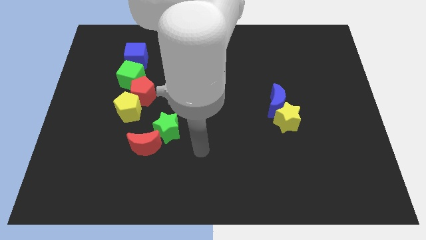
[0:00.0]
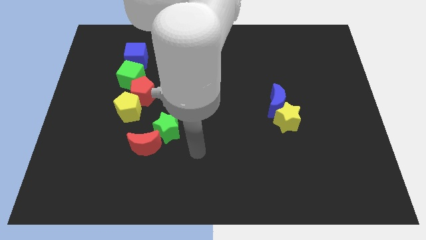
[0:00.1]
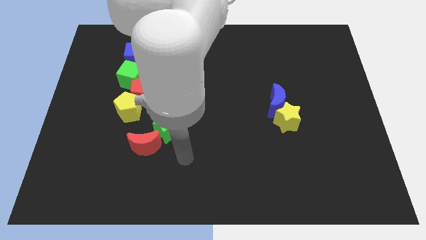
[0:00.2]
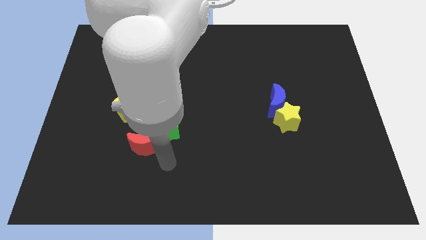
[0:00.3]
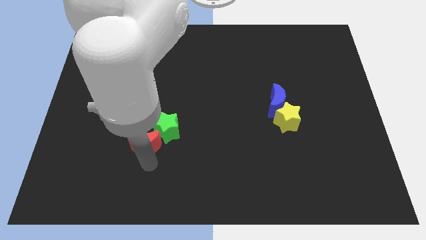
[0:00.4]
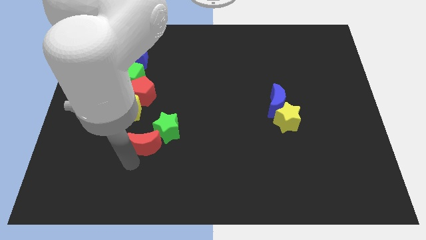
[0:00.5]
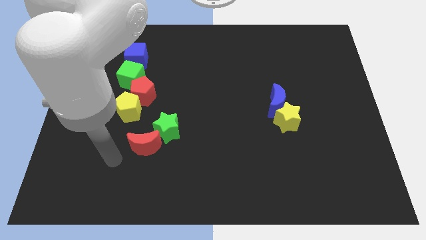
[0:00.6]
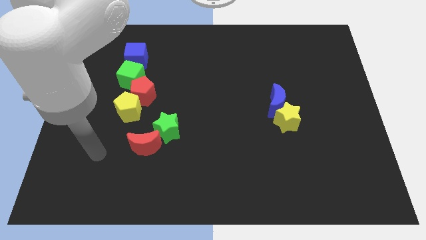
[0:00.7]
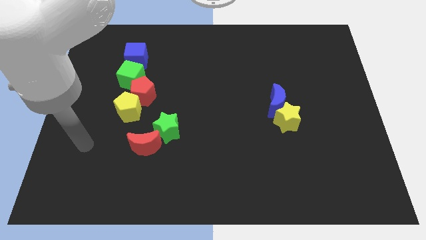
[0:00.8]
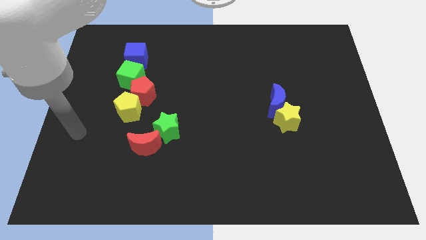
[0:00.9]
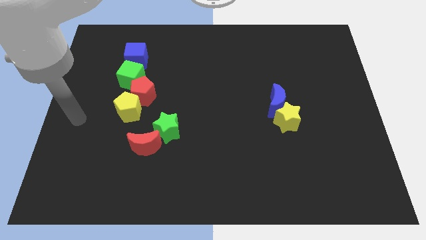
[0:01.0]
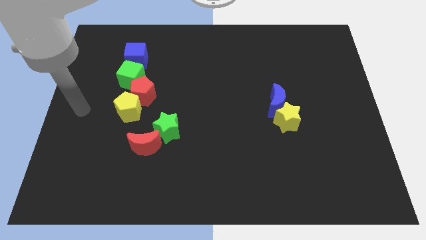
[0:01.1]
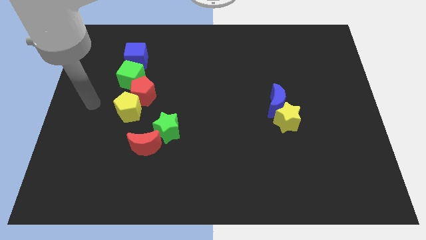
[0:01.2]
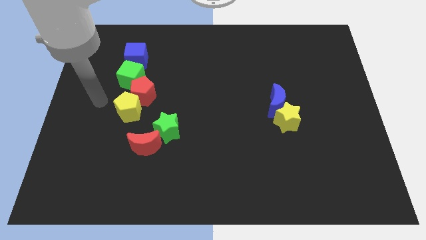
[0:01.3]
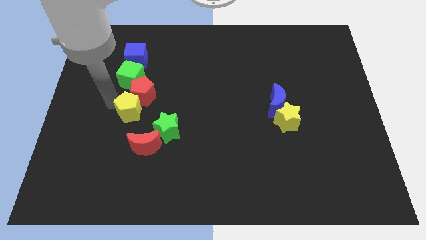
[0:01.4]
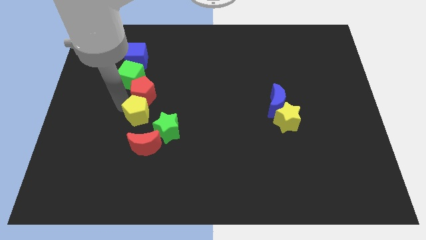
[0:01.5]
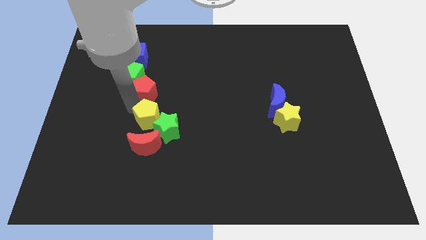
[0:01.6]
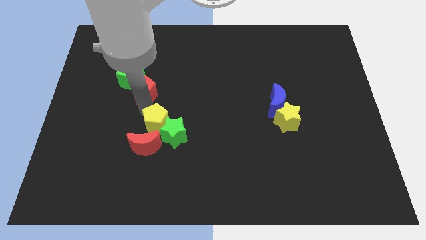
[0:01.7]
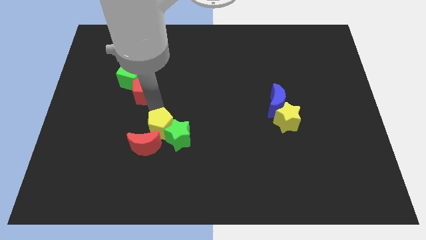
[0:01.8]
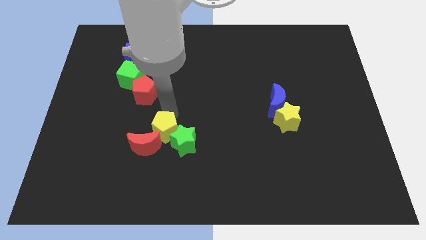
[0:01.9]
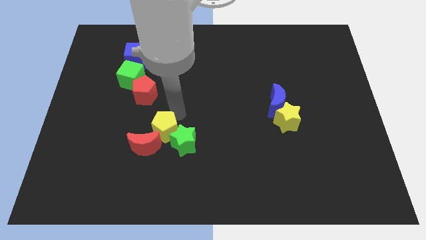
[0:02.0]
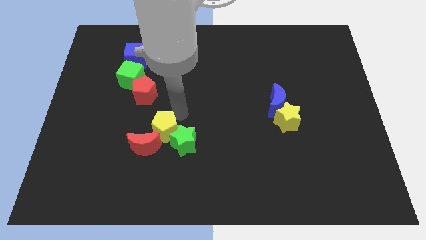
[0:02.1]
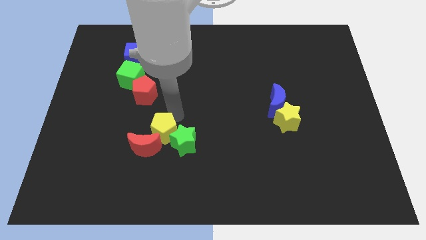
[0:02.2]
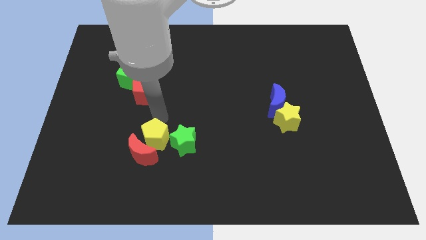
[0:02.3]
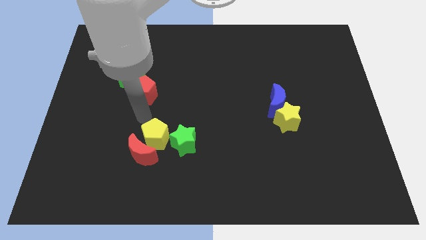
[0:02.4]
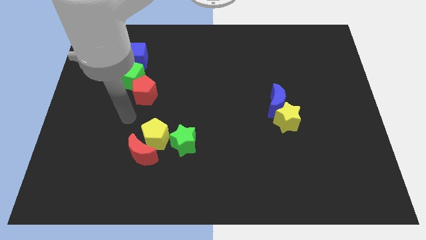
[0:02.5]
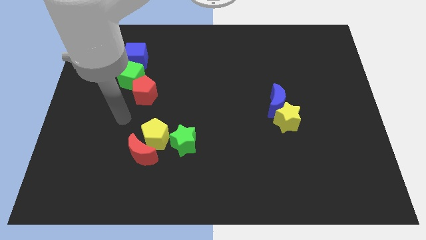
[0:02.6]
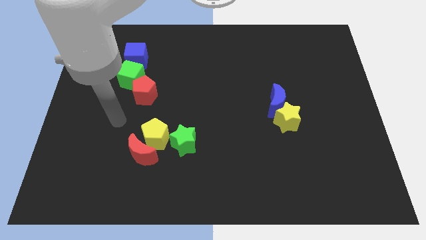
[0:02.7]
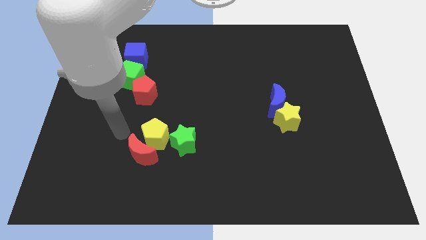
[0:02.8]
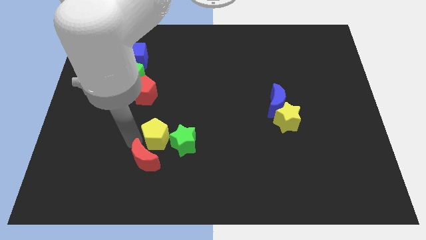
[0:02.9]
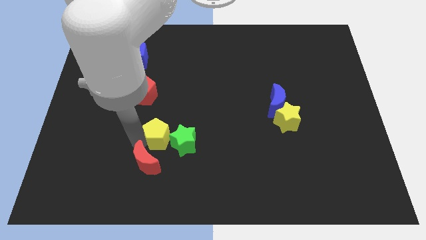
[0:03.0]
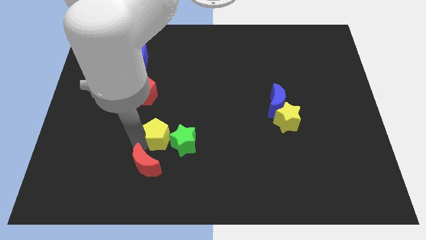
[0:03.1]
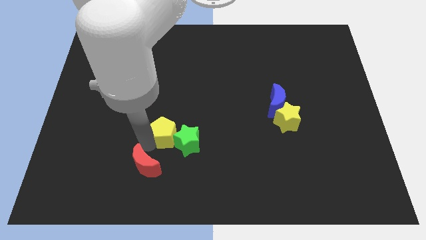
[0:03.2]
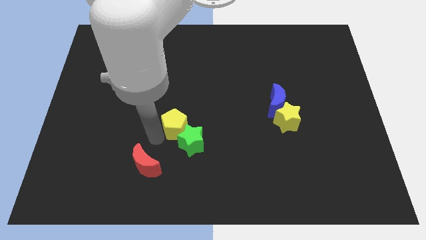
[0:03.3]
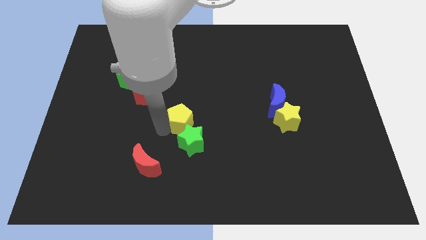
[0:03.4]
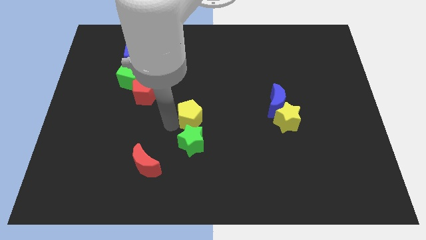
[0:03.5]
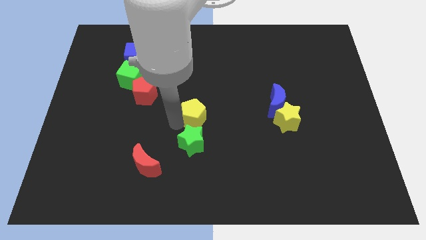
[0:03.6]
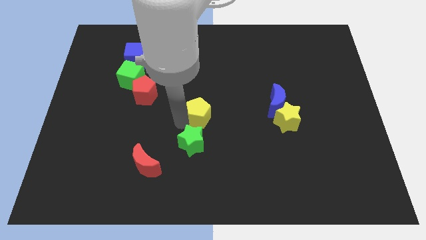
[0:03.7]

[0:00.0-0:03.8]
place the yellow pentagon at the top side of the green star

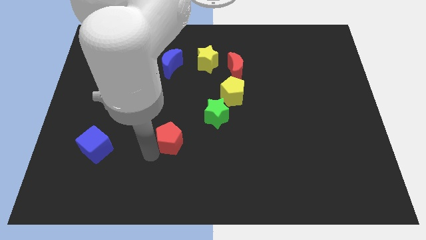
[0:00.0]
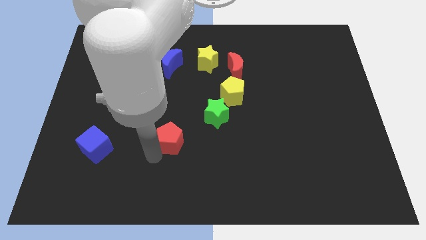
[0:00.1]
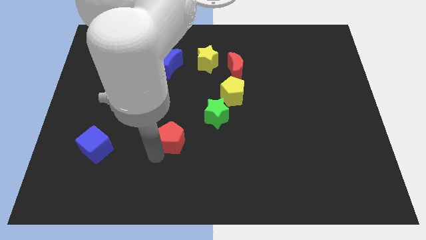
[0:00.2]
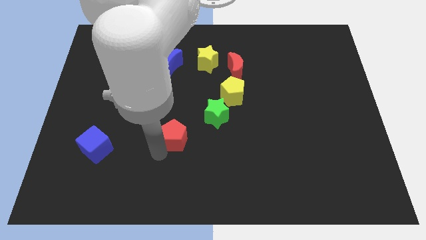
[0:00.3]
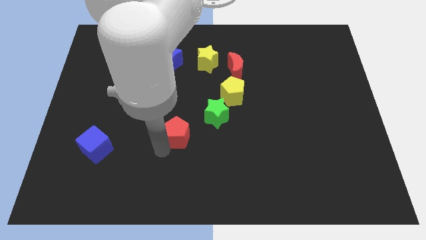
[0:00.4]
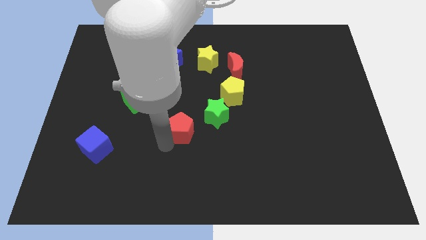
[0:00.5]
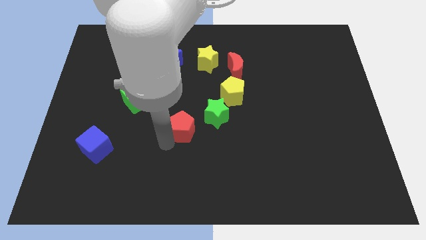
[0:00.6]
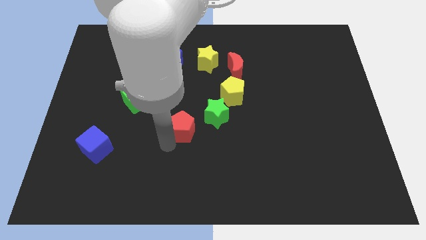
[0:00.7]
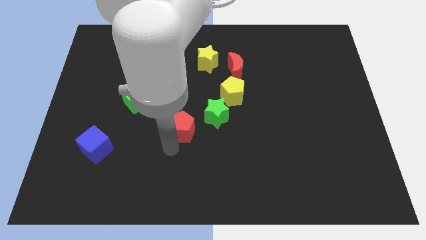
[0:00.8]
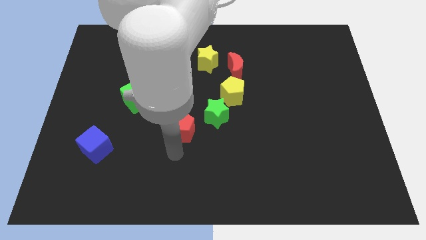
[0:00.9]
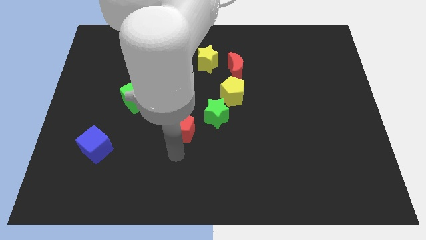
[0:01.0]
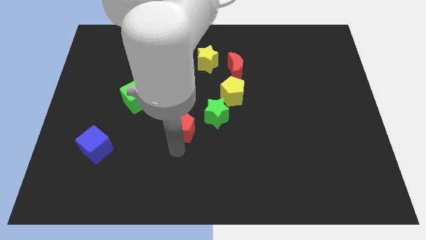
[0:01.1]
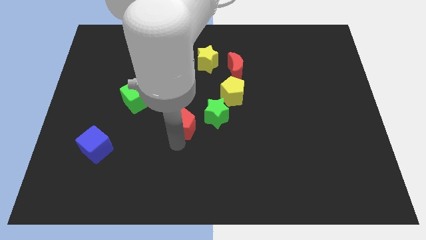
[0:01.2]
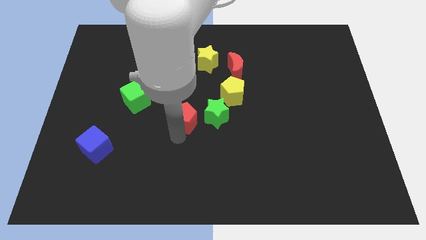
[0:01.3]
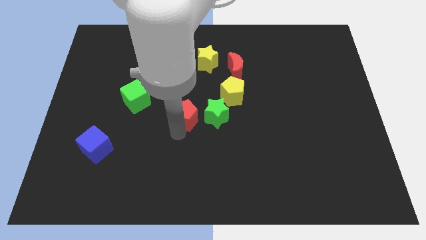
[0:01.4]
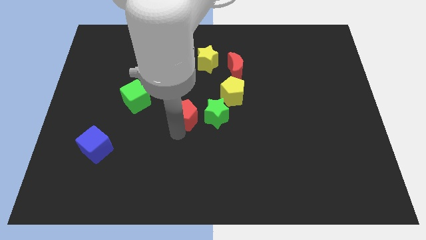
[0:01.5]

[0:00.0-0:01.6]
put the red pentagon left to the green star

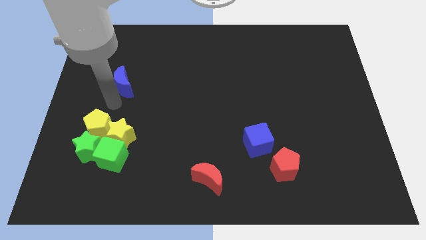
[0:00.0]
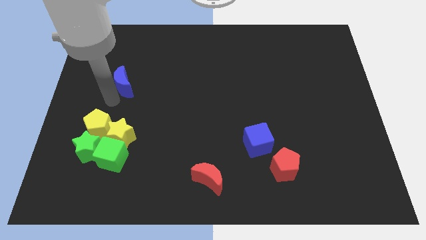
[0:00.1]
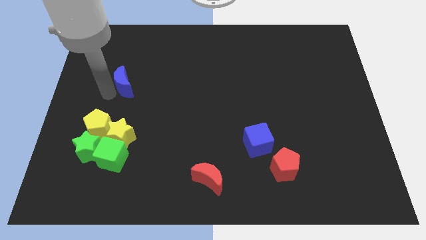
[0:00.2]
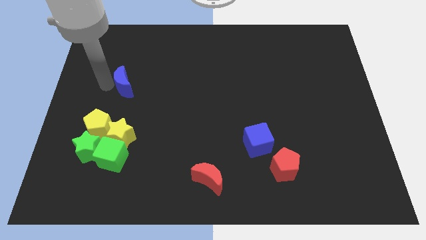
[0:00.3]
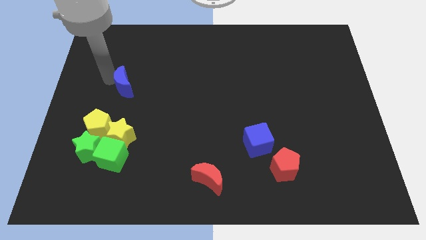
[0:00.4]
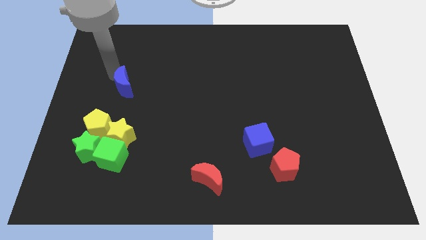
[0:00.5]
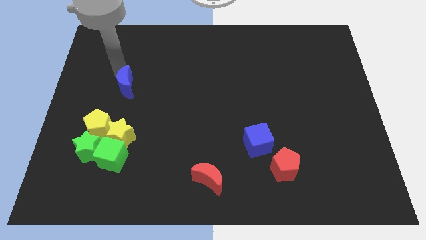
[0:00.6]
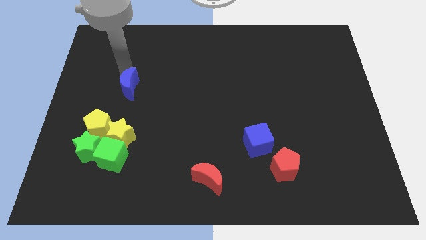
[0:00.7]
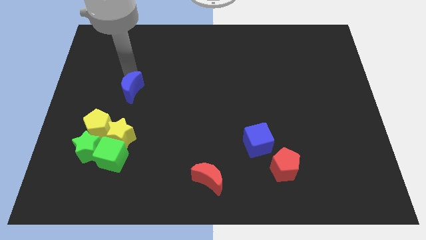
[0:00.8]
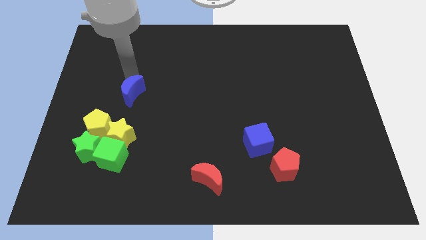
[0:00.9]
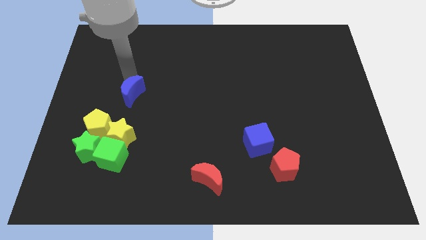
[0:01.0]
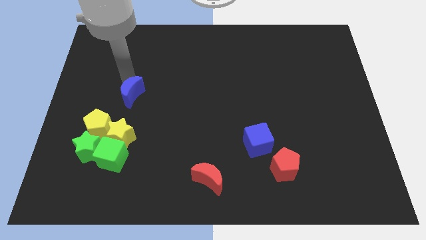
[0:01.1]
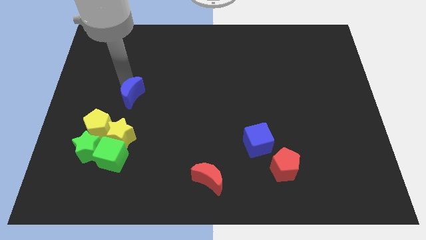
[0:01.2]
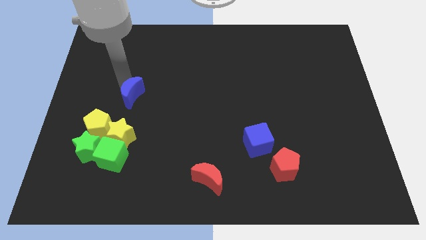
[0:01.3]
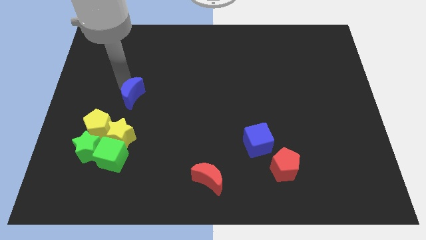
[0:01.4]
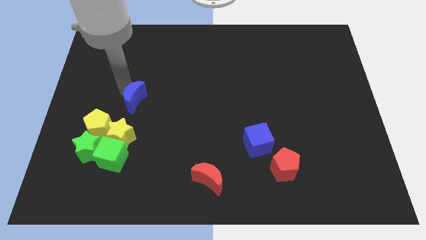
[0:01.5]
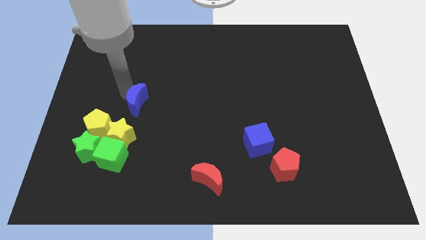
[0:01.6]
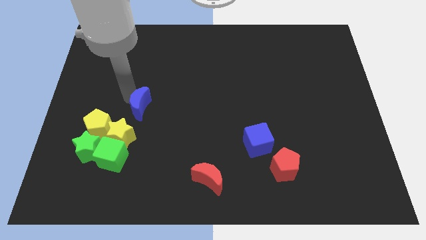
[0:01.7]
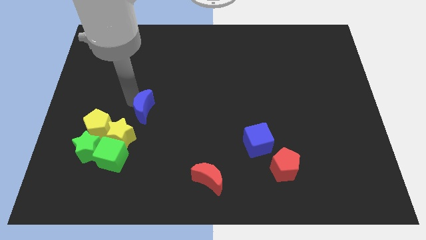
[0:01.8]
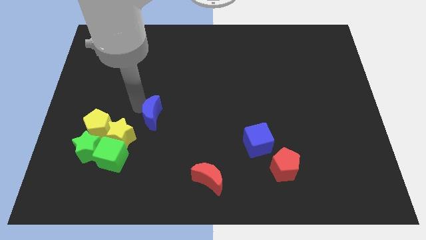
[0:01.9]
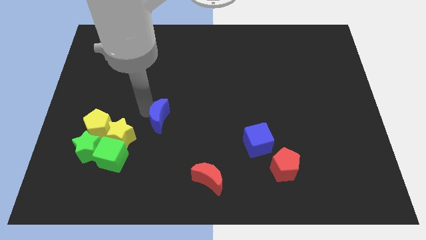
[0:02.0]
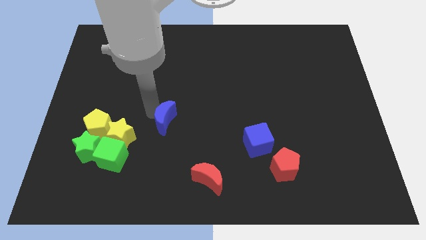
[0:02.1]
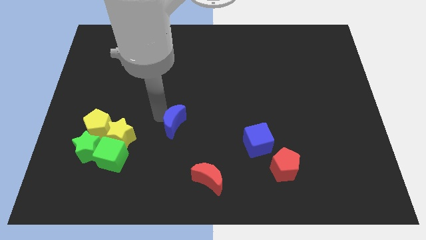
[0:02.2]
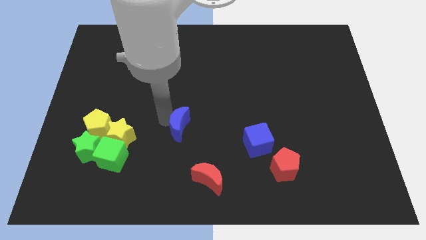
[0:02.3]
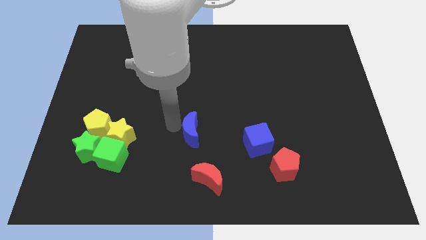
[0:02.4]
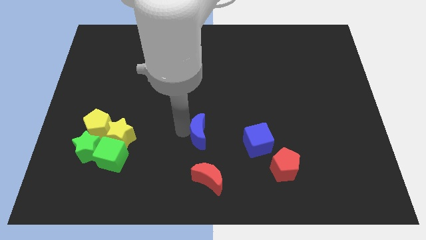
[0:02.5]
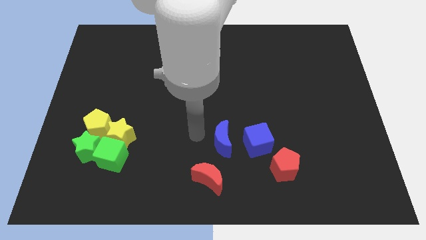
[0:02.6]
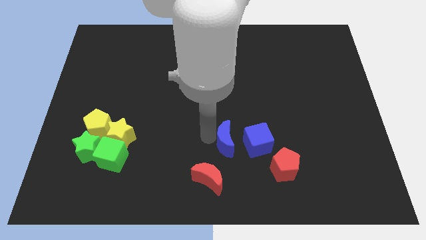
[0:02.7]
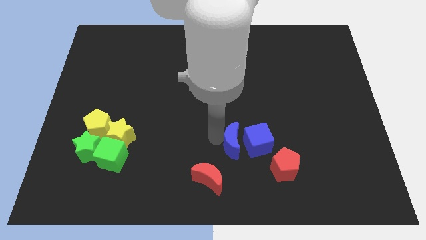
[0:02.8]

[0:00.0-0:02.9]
push blue moon to the left of blue cube

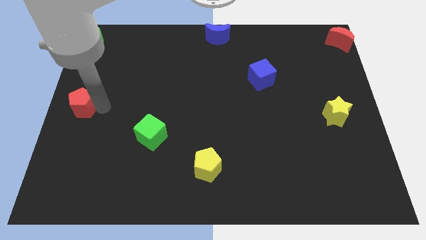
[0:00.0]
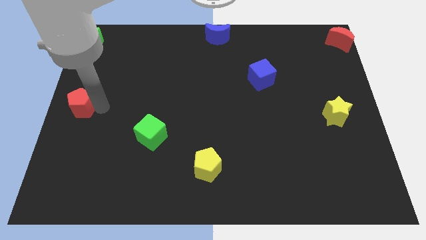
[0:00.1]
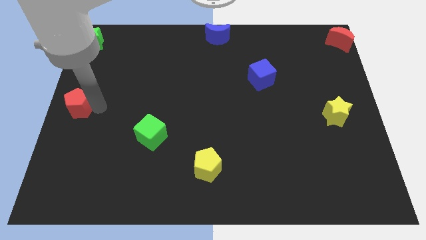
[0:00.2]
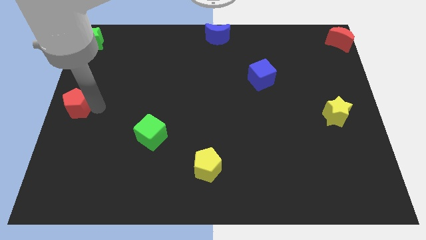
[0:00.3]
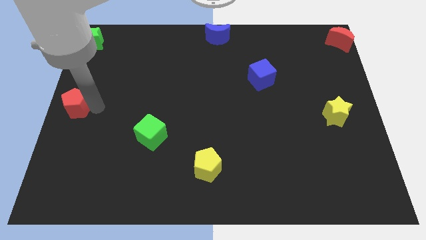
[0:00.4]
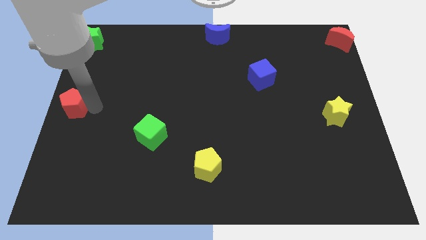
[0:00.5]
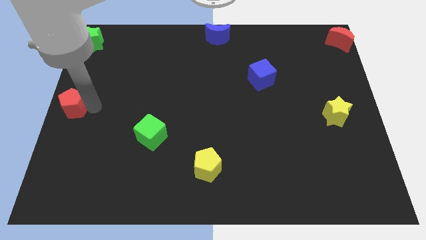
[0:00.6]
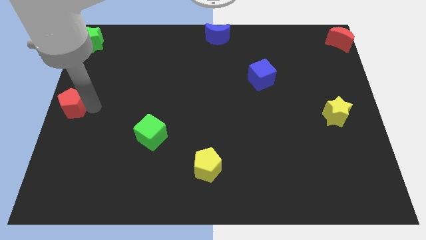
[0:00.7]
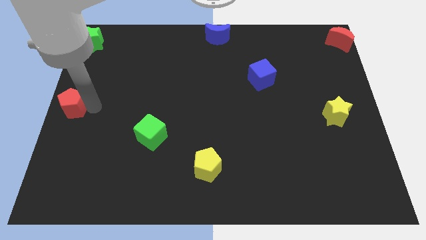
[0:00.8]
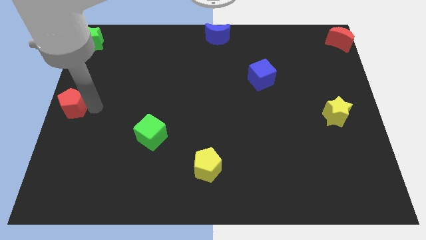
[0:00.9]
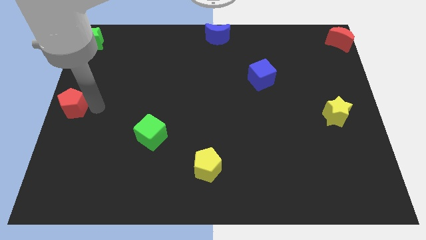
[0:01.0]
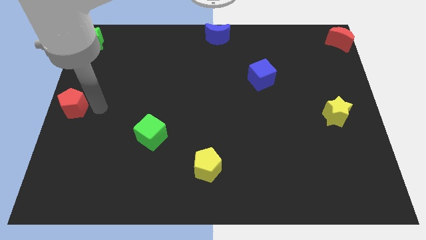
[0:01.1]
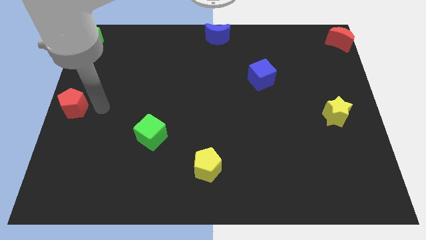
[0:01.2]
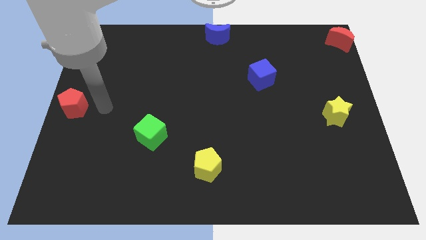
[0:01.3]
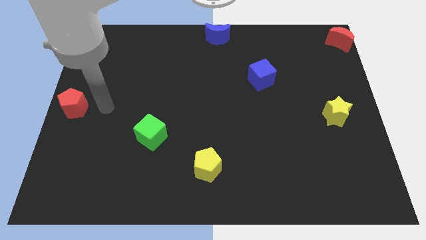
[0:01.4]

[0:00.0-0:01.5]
place red pentagon to the left center of the board
